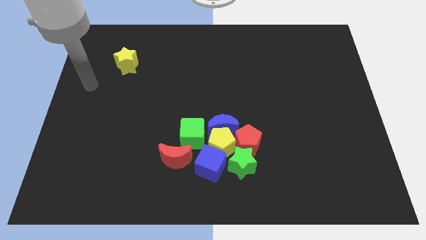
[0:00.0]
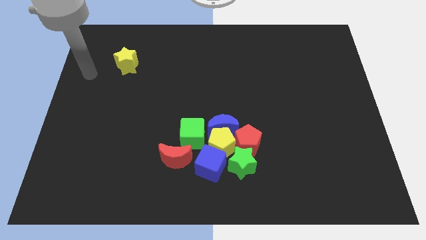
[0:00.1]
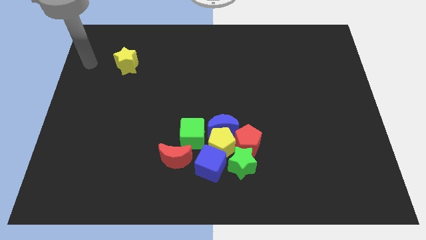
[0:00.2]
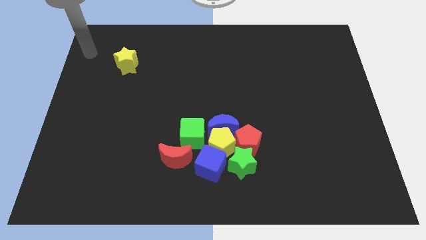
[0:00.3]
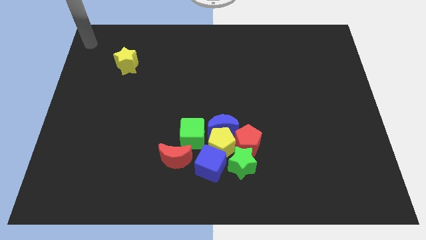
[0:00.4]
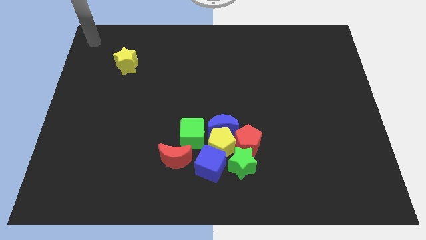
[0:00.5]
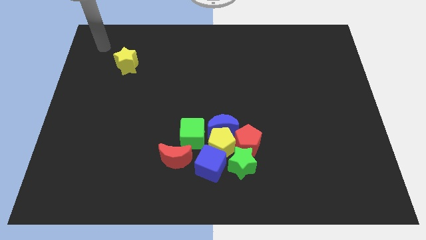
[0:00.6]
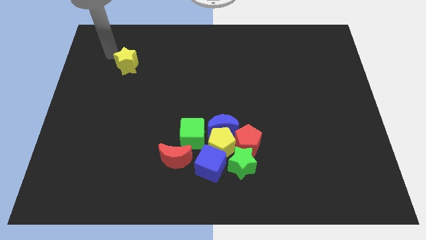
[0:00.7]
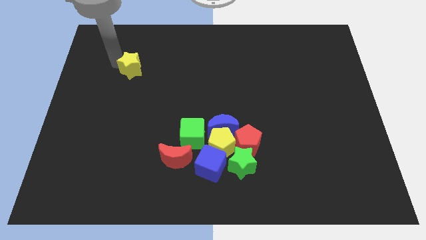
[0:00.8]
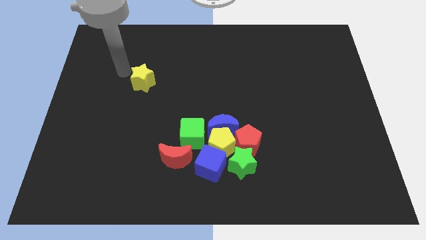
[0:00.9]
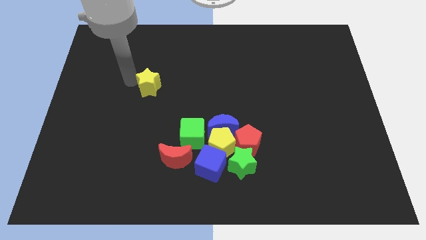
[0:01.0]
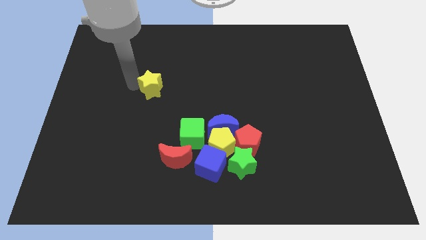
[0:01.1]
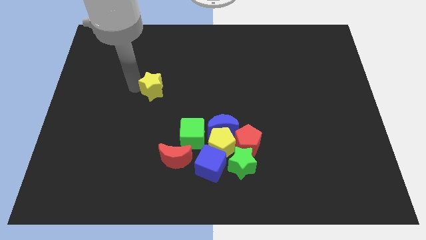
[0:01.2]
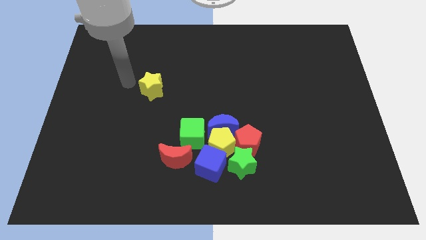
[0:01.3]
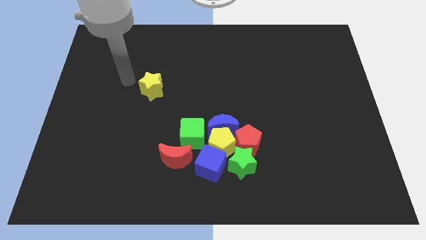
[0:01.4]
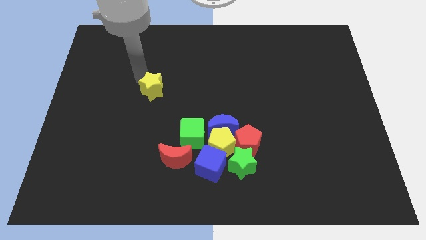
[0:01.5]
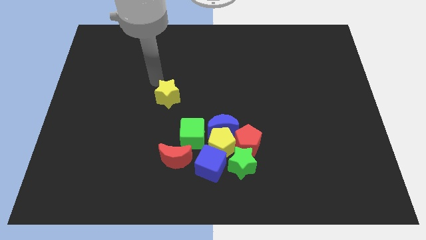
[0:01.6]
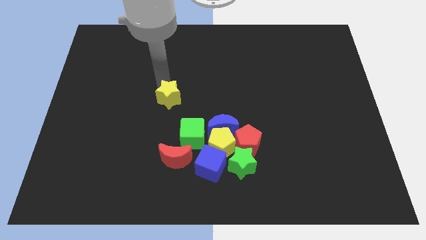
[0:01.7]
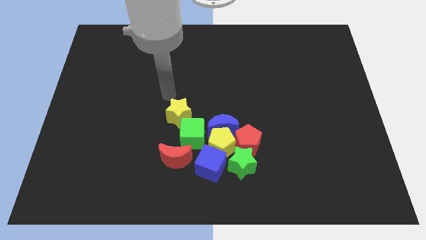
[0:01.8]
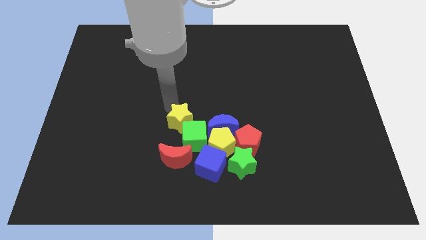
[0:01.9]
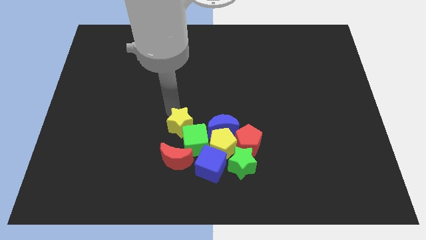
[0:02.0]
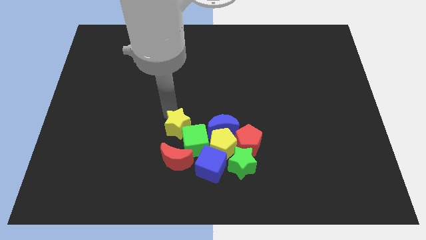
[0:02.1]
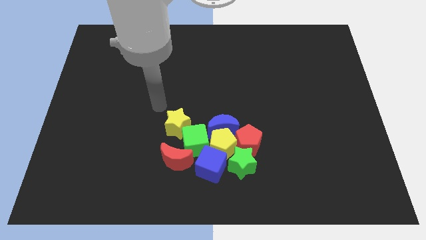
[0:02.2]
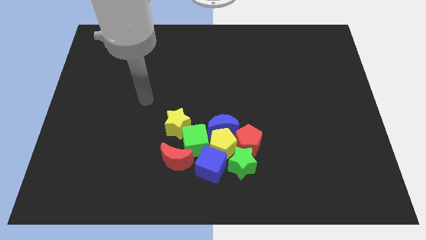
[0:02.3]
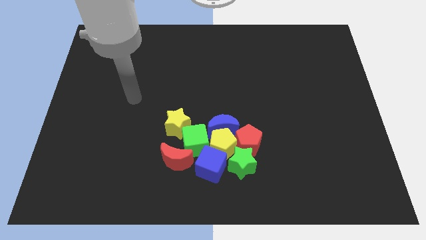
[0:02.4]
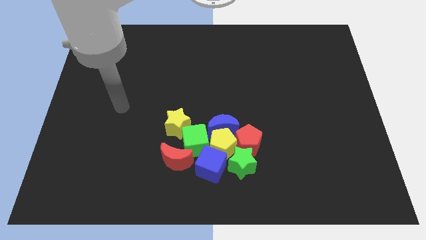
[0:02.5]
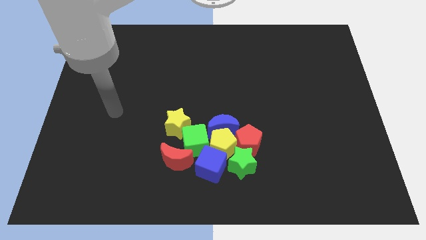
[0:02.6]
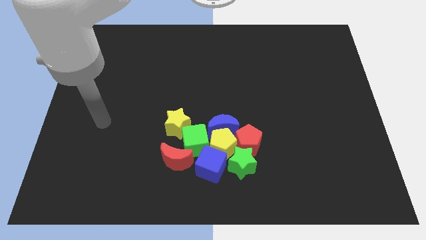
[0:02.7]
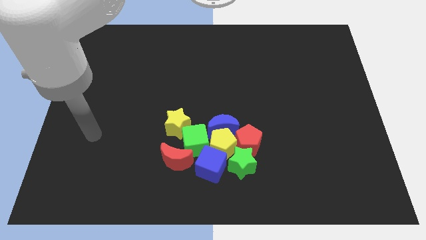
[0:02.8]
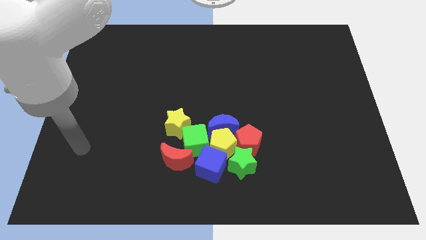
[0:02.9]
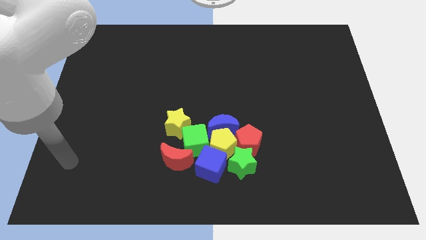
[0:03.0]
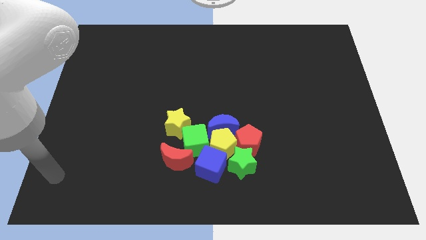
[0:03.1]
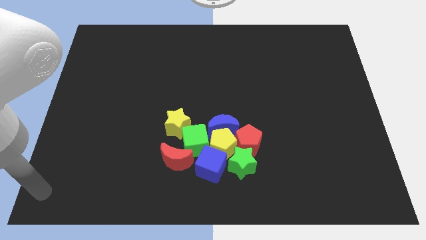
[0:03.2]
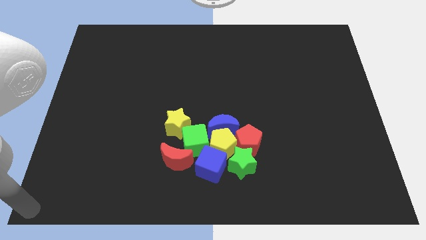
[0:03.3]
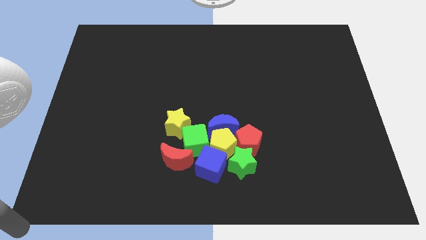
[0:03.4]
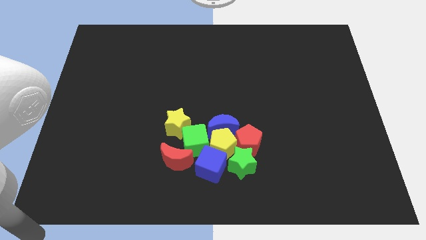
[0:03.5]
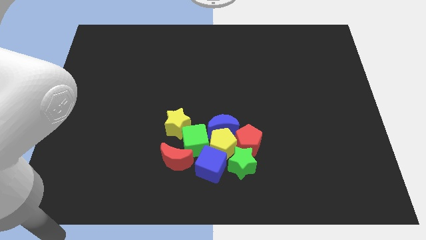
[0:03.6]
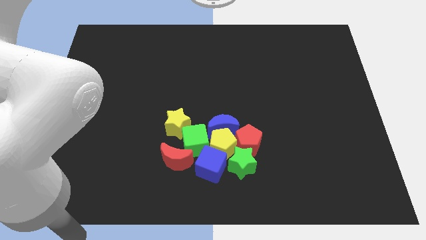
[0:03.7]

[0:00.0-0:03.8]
push the yellow star to the top left of the green cube

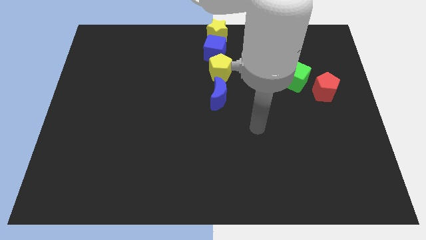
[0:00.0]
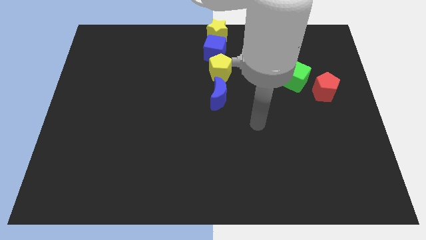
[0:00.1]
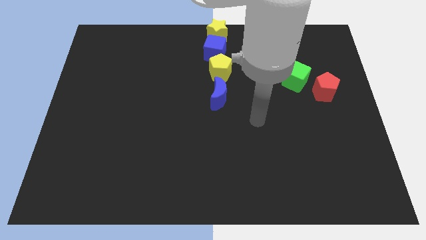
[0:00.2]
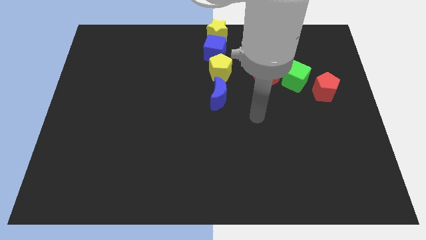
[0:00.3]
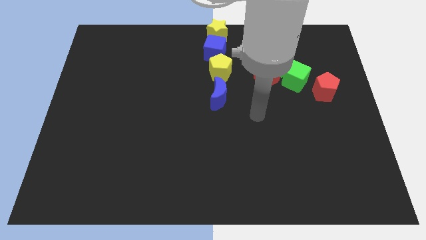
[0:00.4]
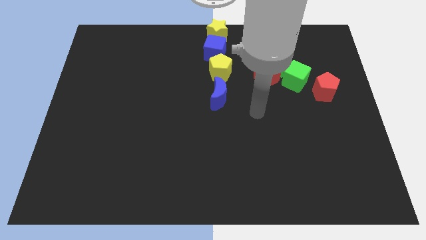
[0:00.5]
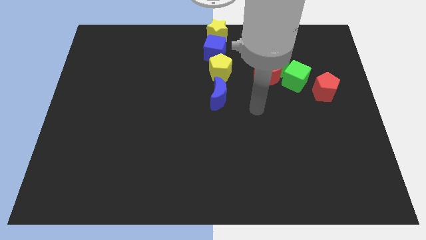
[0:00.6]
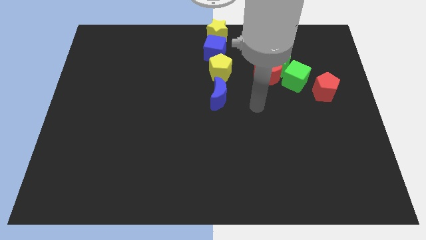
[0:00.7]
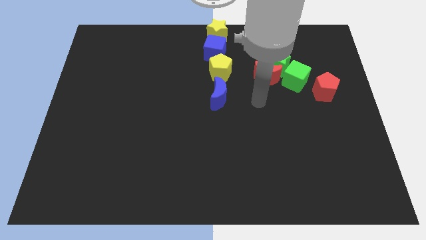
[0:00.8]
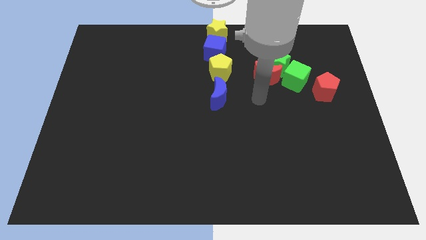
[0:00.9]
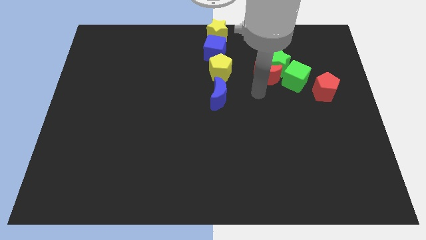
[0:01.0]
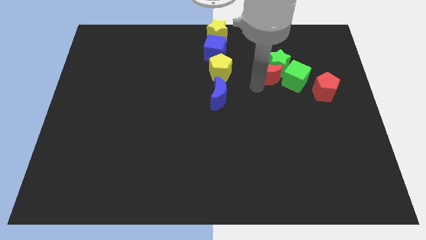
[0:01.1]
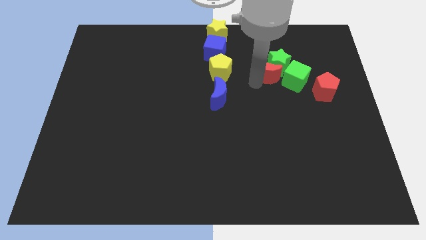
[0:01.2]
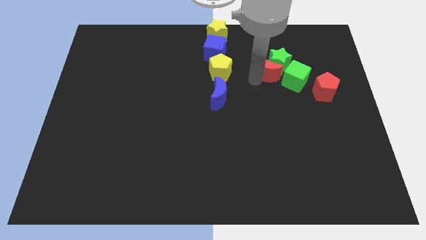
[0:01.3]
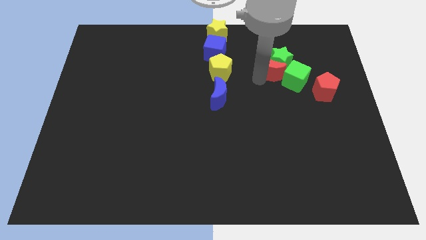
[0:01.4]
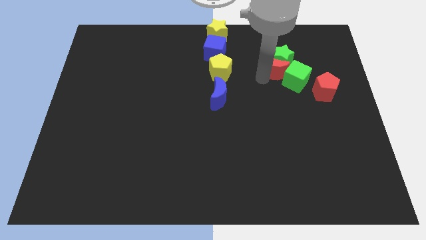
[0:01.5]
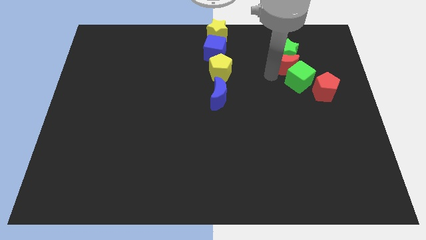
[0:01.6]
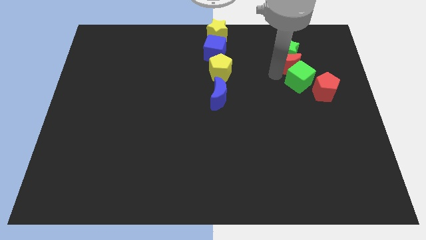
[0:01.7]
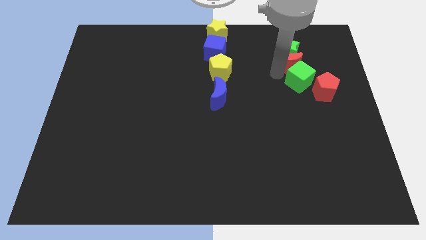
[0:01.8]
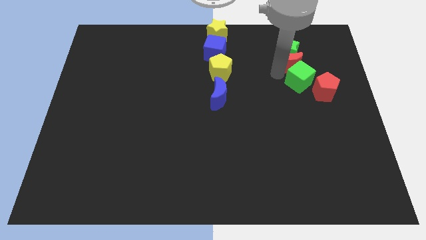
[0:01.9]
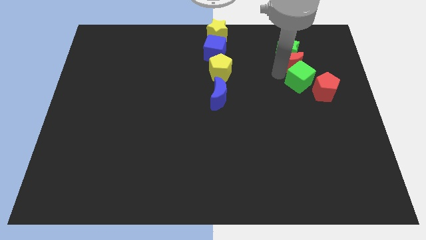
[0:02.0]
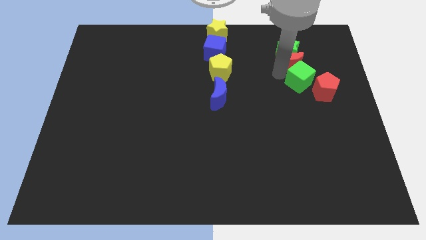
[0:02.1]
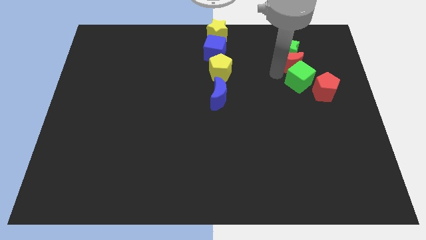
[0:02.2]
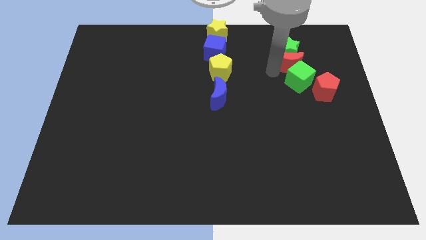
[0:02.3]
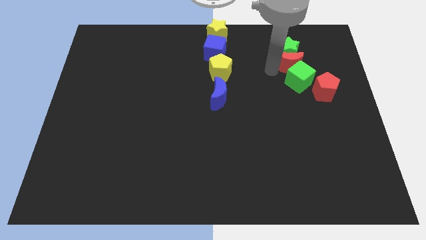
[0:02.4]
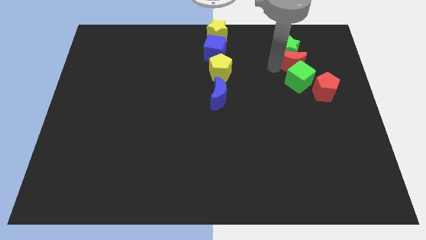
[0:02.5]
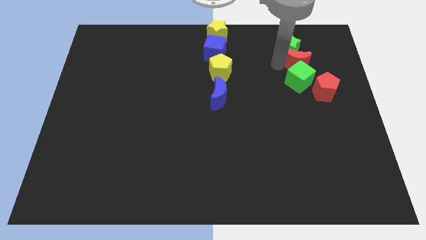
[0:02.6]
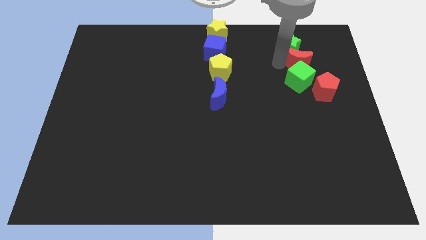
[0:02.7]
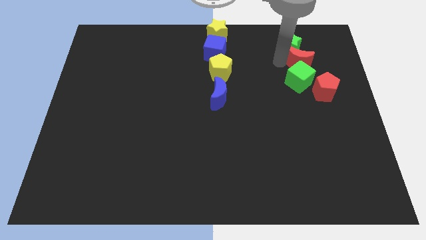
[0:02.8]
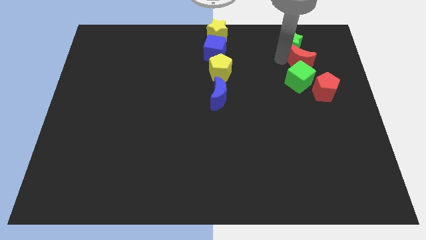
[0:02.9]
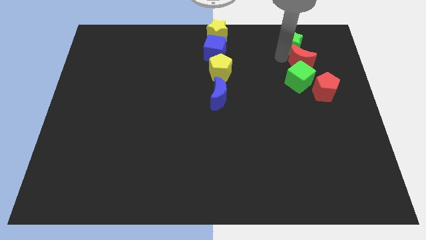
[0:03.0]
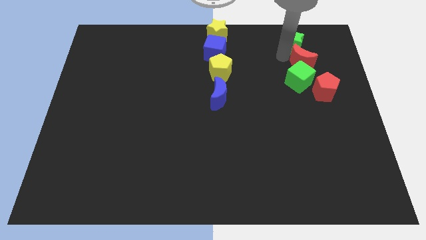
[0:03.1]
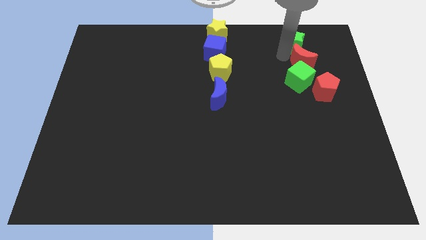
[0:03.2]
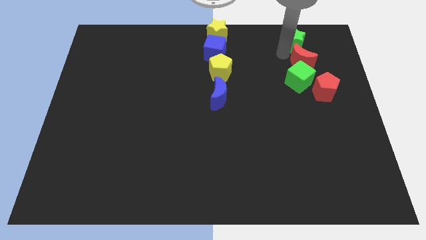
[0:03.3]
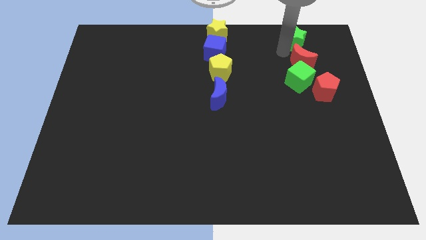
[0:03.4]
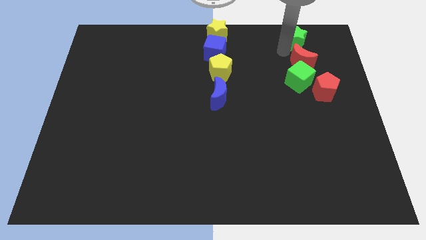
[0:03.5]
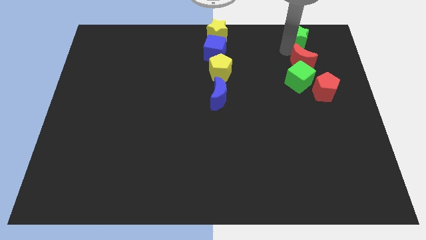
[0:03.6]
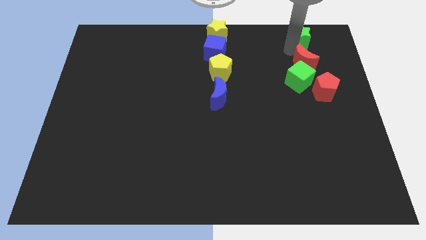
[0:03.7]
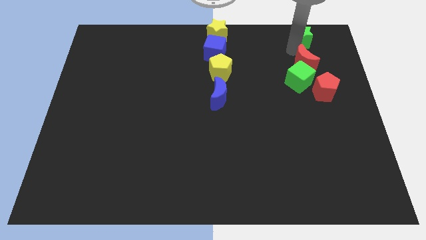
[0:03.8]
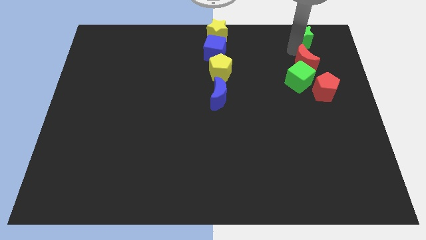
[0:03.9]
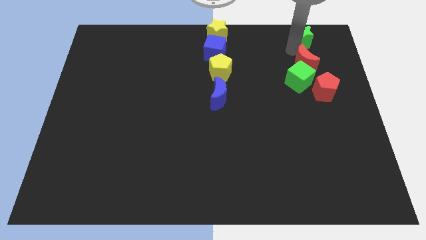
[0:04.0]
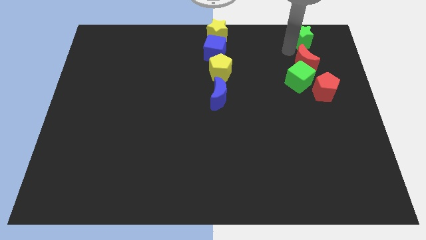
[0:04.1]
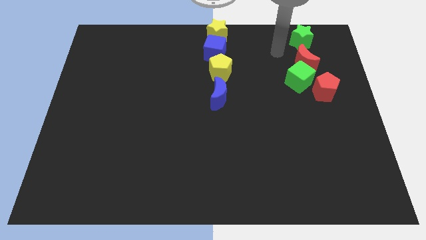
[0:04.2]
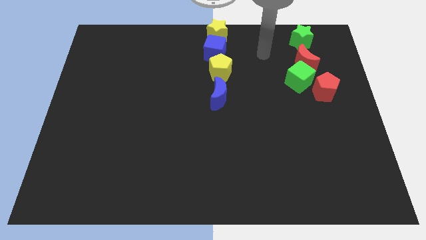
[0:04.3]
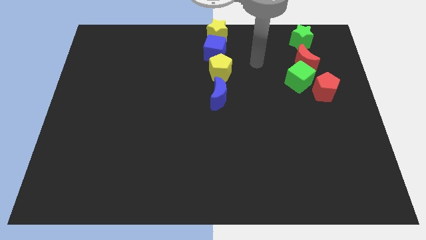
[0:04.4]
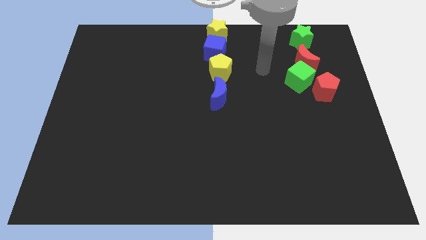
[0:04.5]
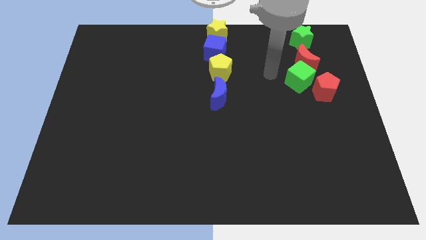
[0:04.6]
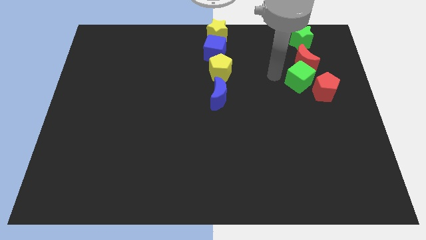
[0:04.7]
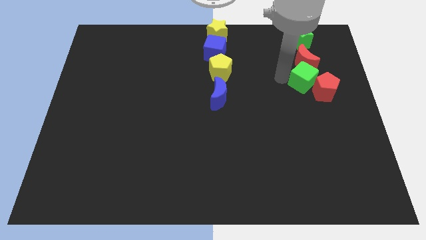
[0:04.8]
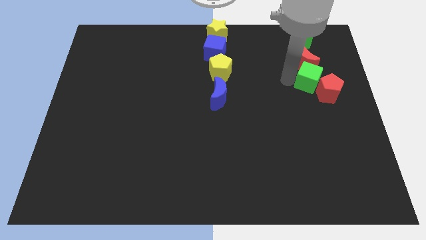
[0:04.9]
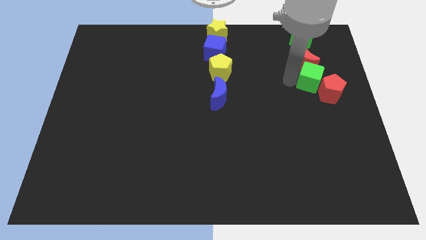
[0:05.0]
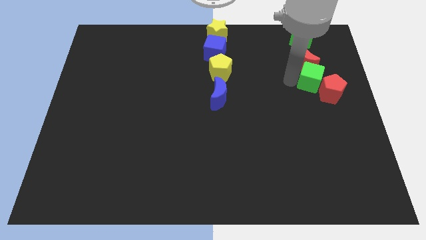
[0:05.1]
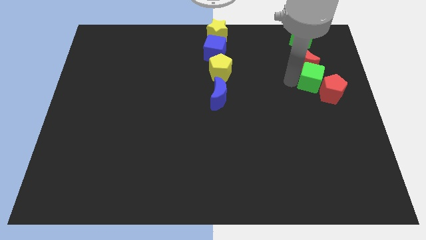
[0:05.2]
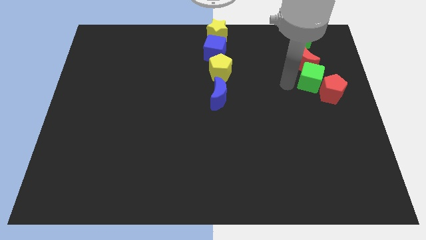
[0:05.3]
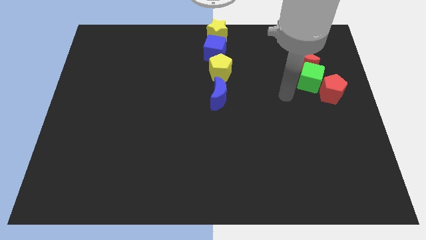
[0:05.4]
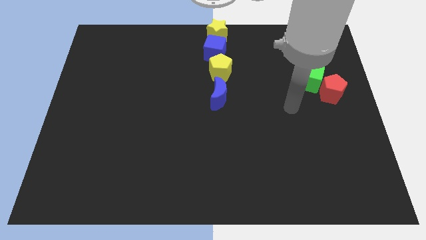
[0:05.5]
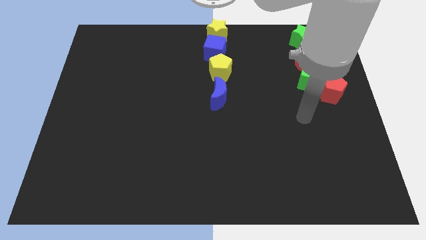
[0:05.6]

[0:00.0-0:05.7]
push the red crescent into the green star
